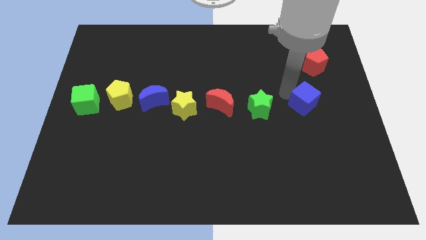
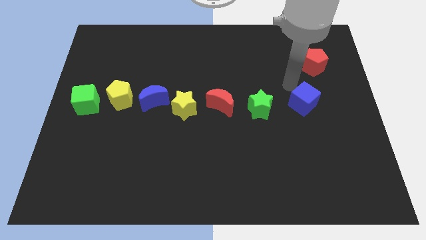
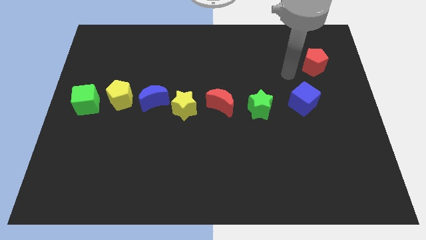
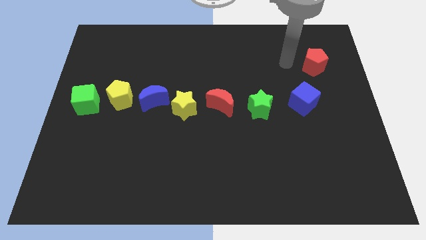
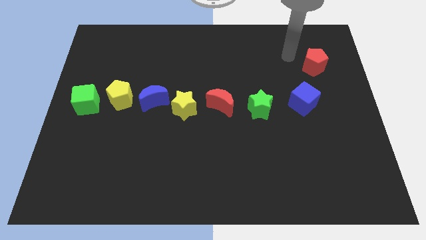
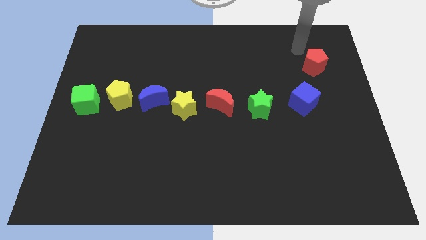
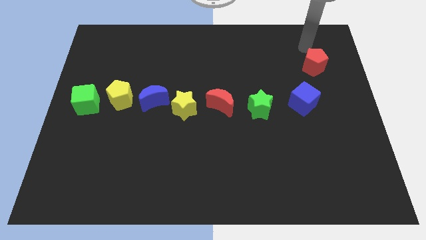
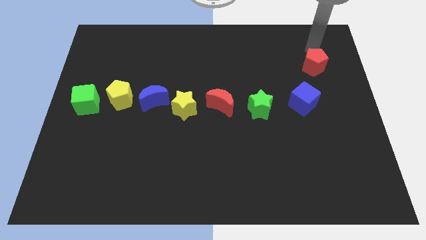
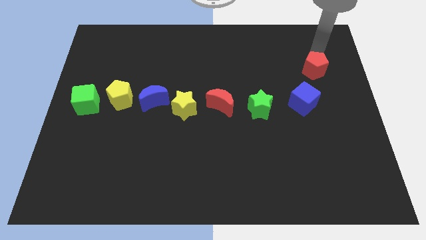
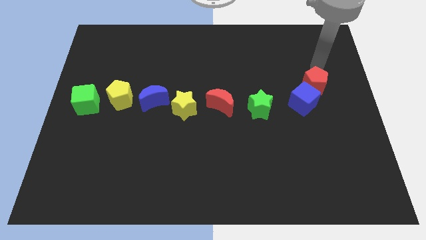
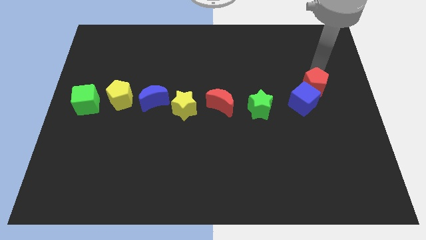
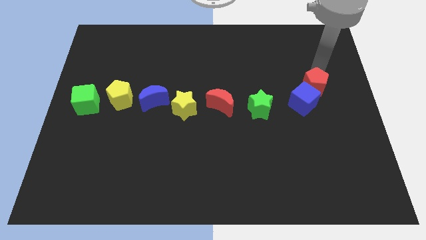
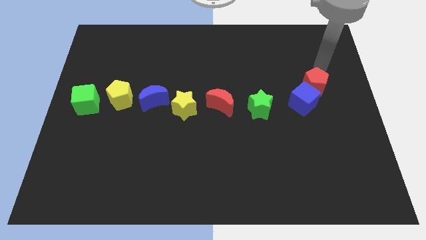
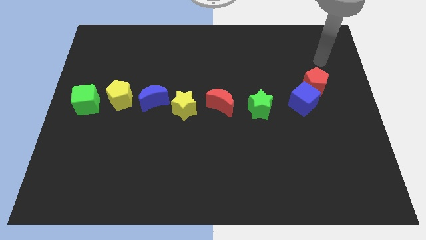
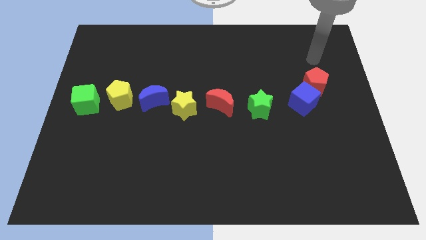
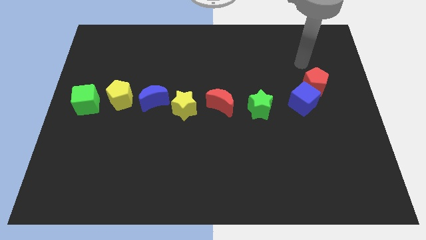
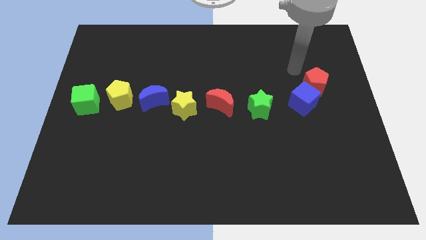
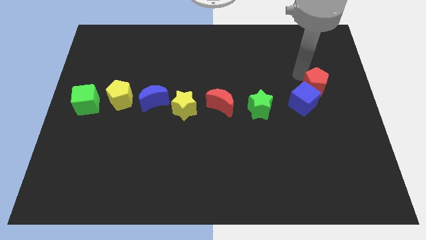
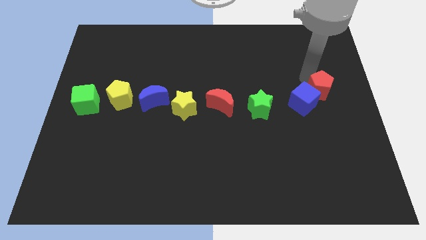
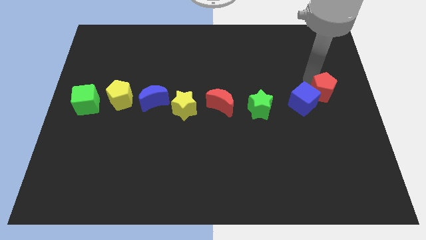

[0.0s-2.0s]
push the red pentagon to the right of the blue cube

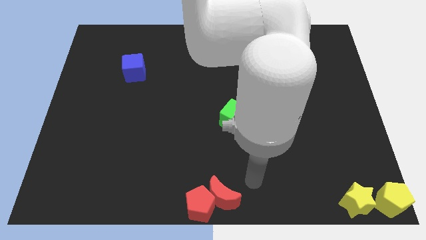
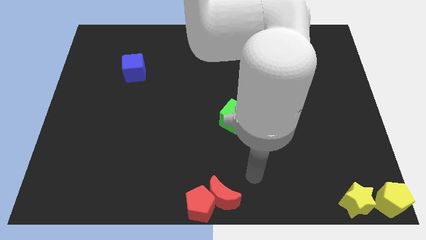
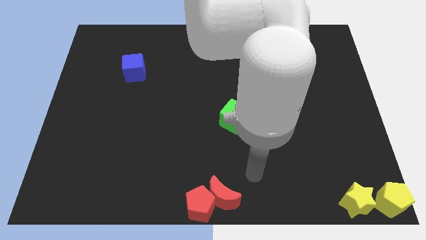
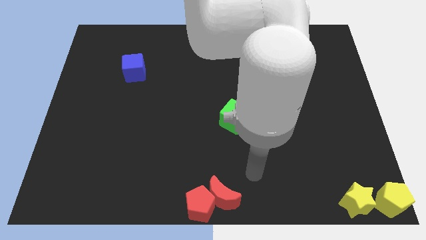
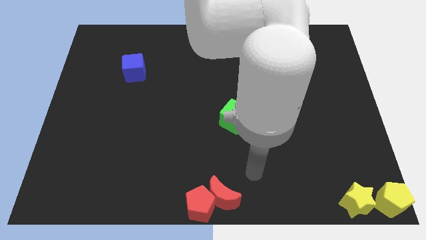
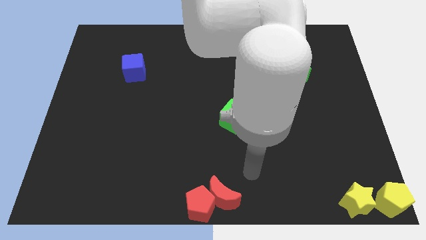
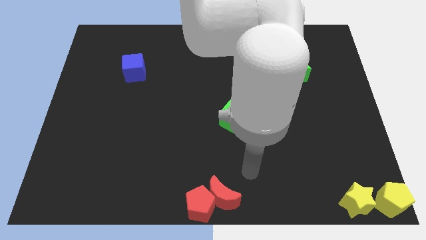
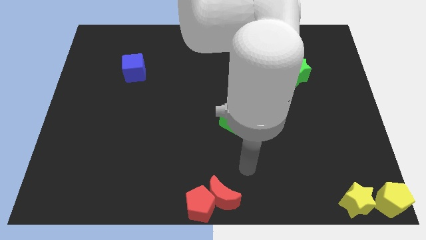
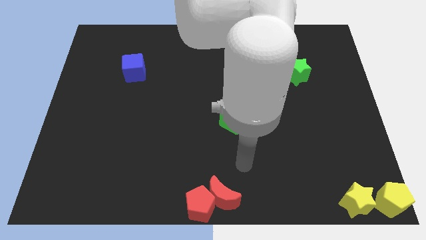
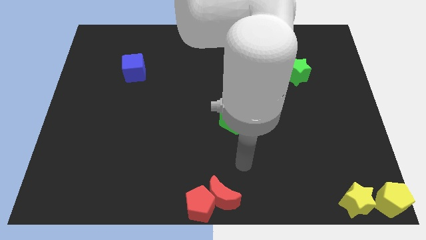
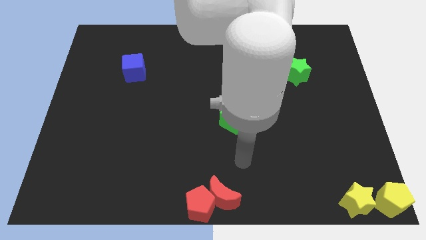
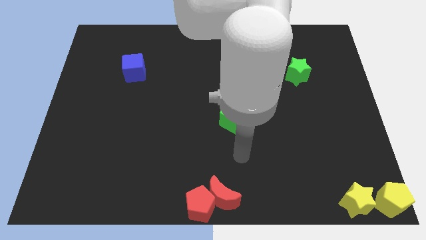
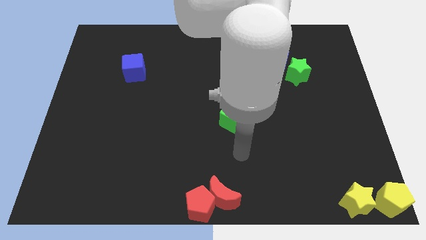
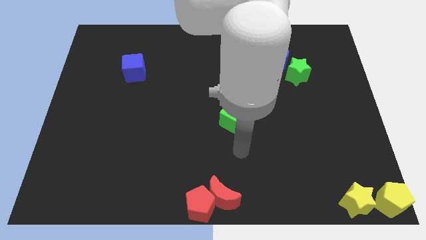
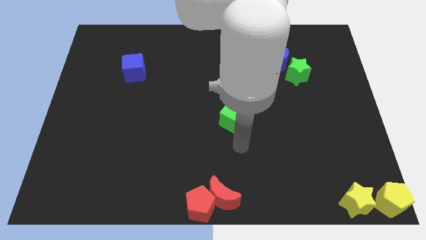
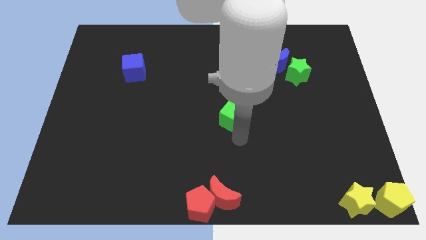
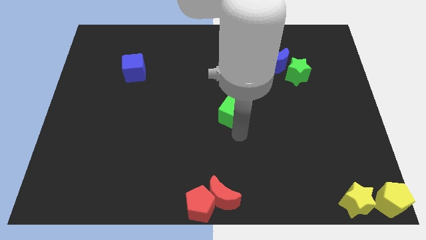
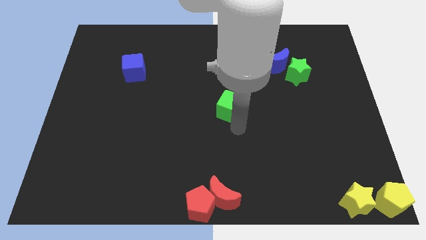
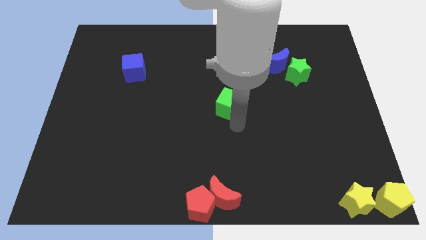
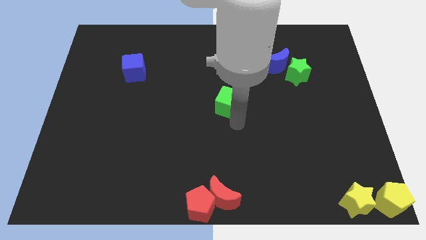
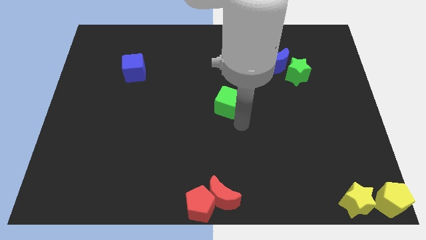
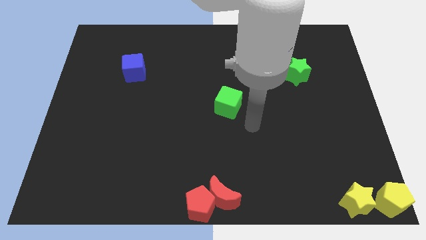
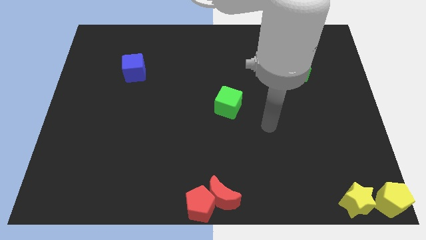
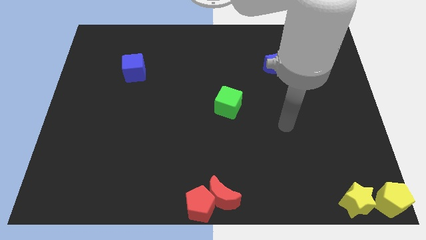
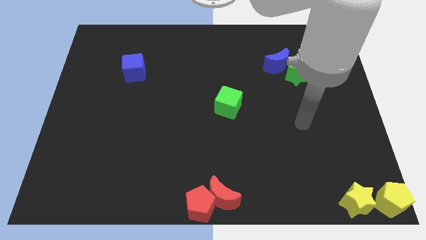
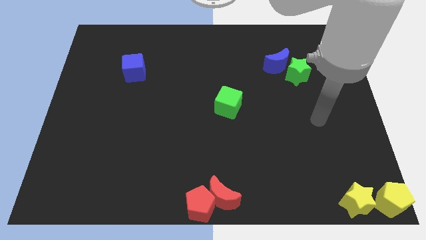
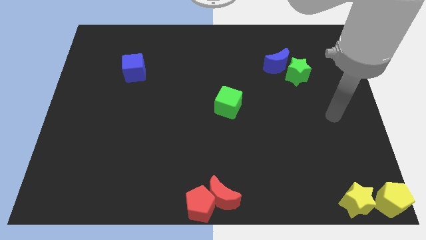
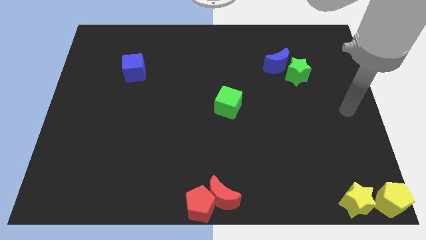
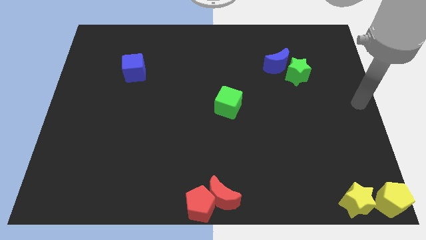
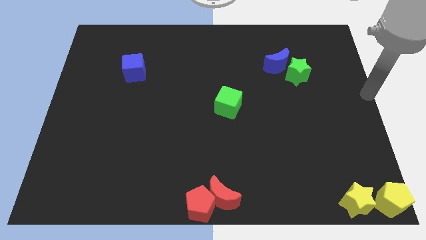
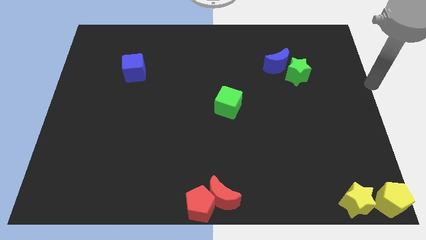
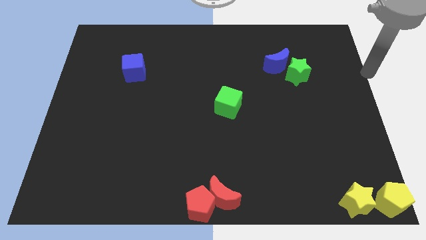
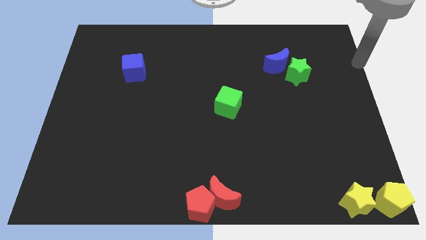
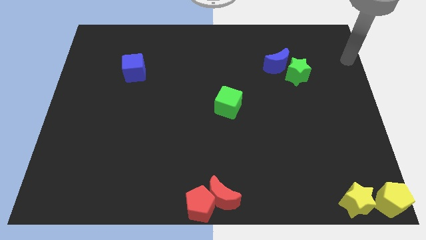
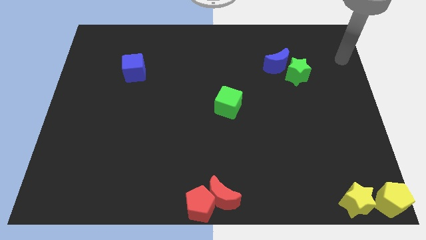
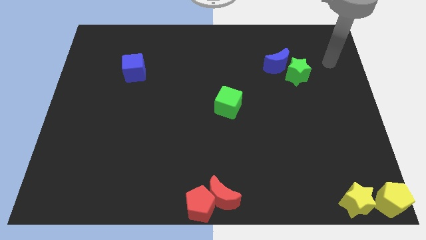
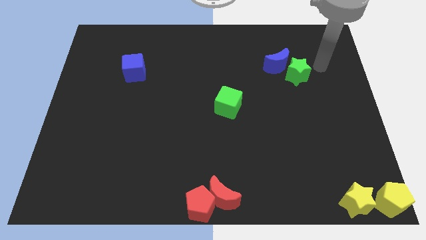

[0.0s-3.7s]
move the green cube slightly to the top

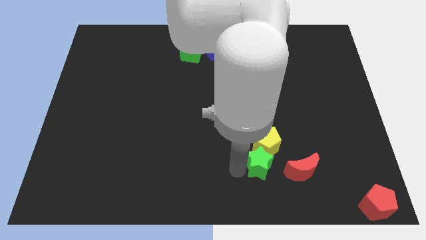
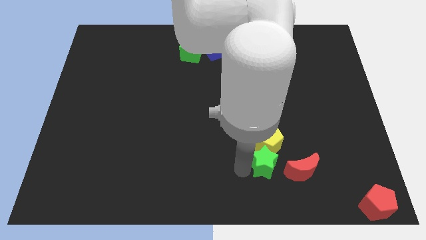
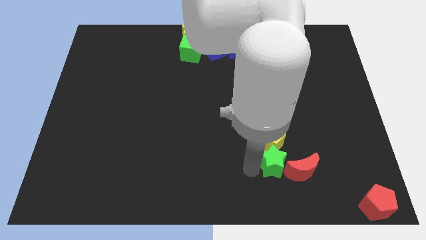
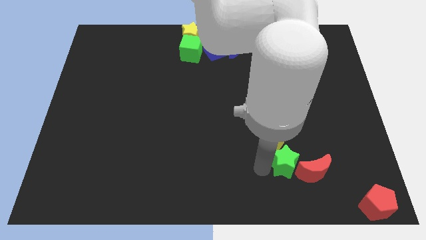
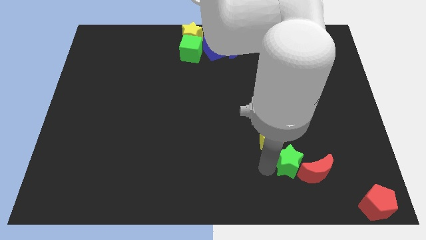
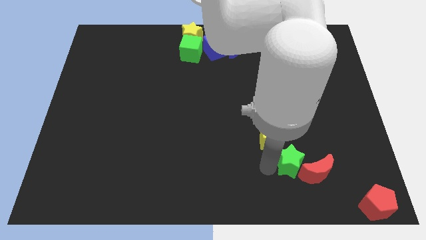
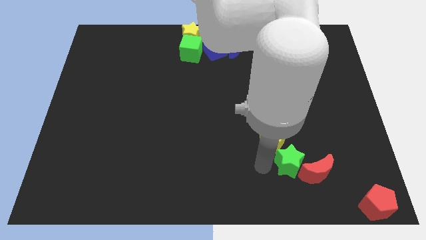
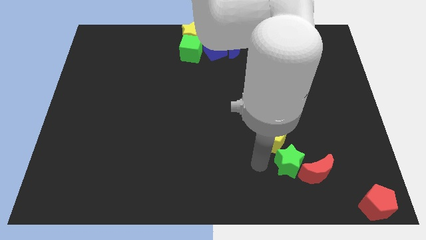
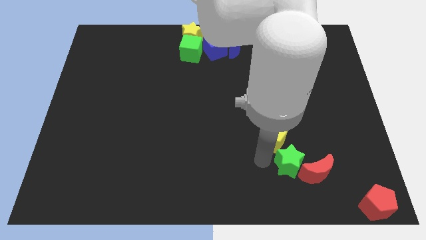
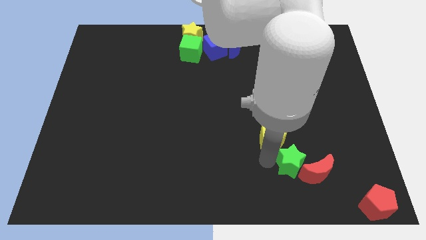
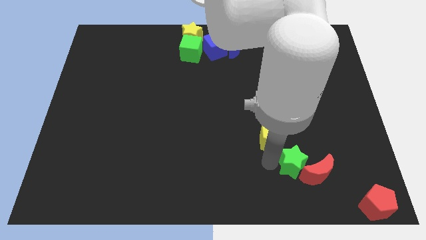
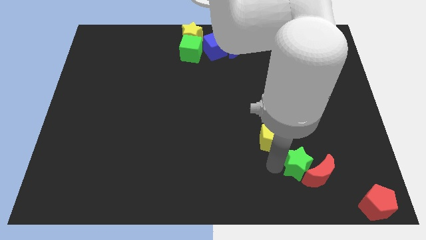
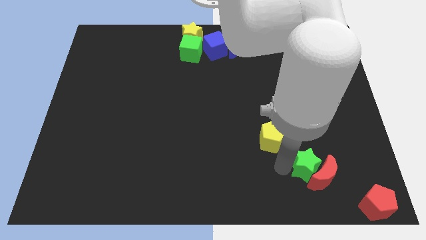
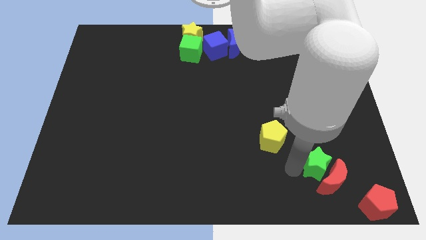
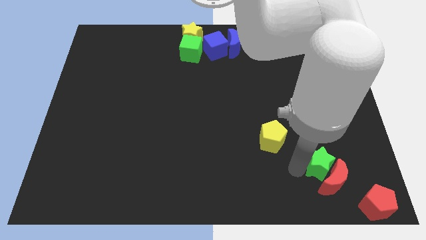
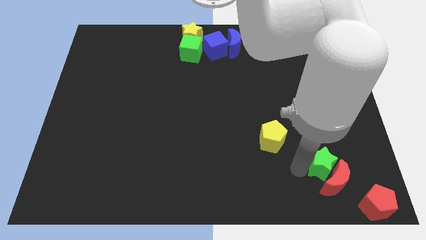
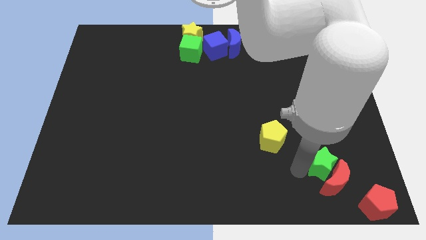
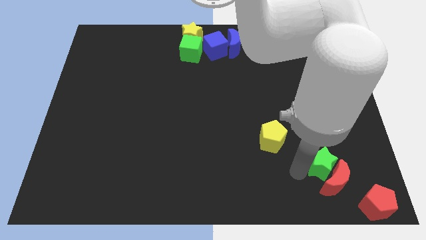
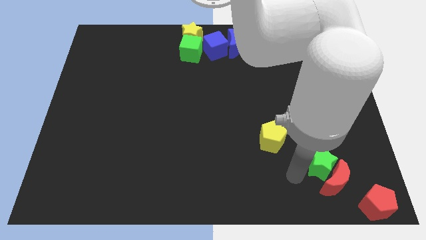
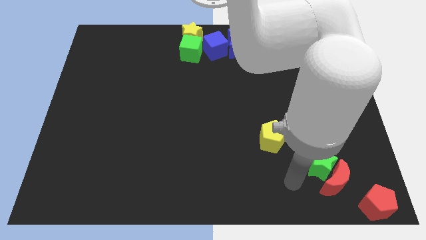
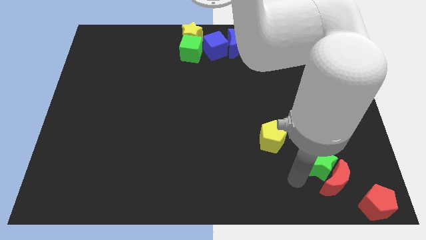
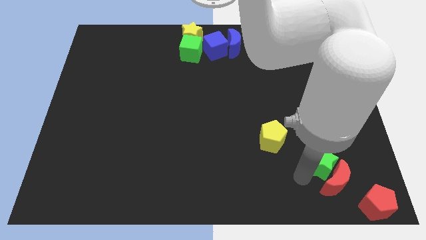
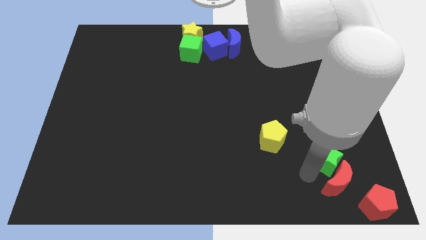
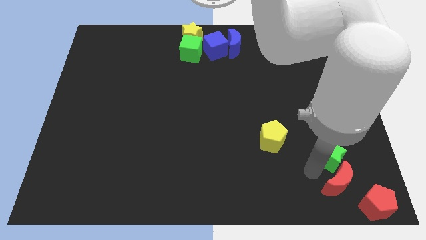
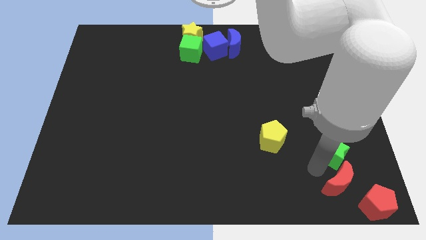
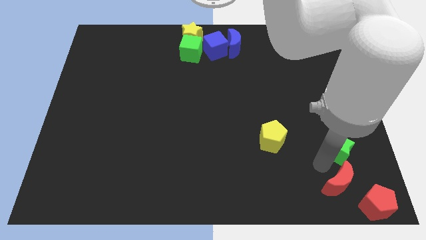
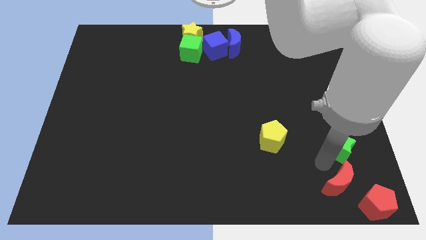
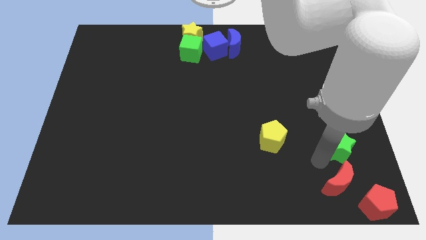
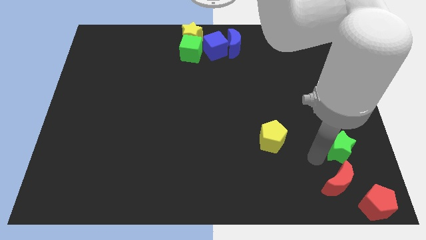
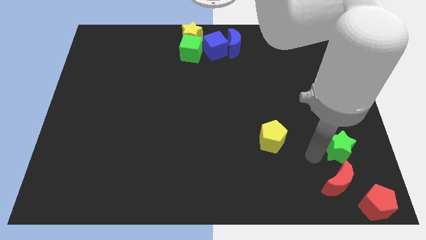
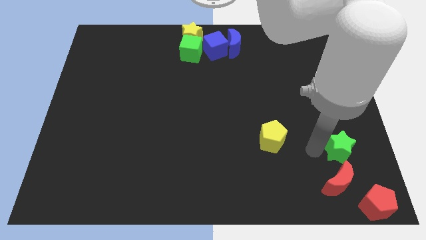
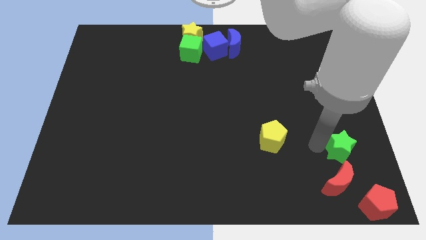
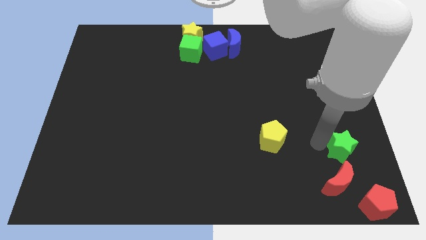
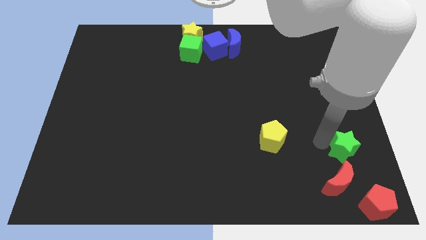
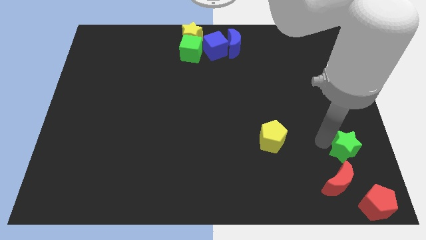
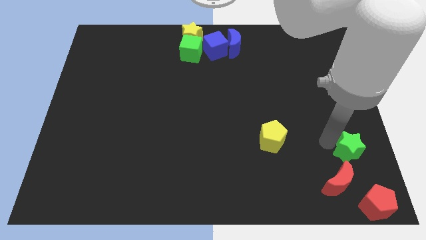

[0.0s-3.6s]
move the green star to the bottom right of the board
